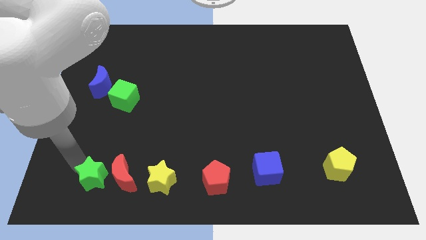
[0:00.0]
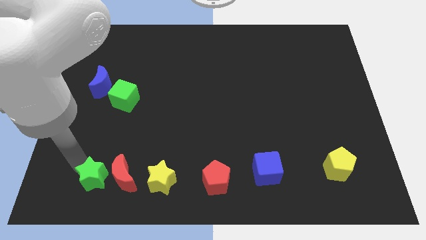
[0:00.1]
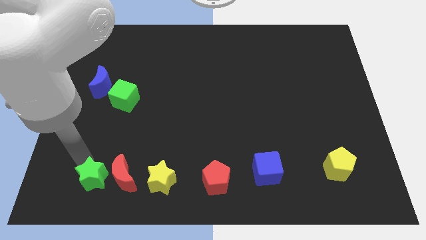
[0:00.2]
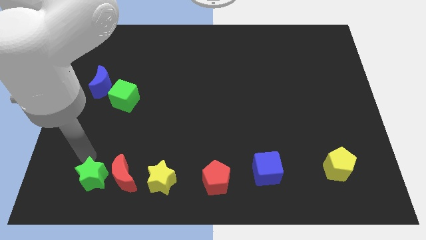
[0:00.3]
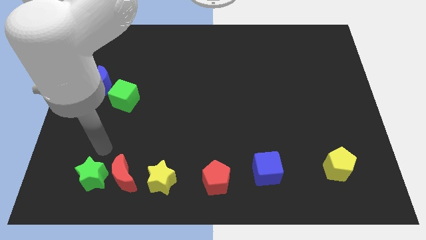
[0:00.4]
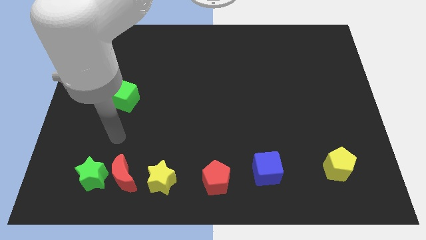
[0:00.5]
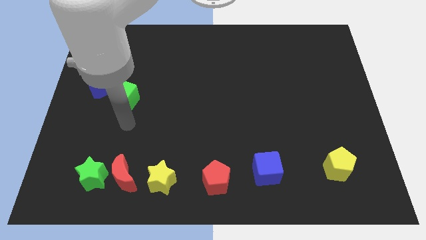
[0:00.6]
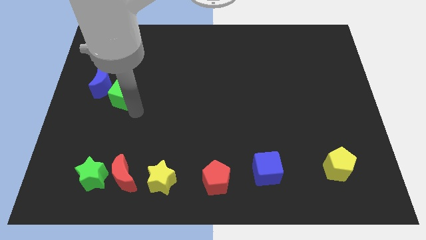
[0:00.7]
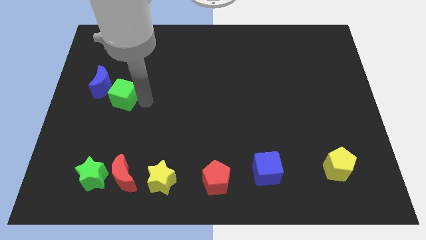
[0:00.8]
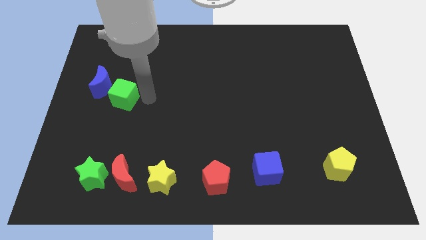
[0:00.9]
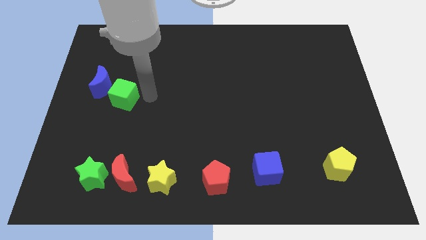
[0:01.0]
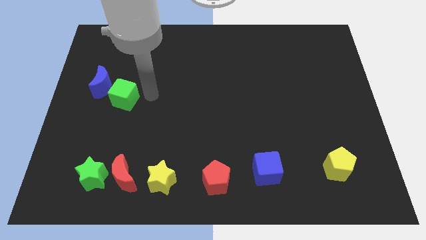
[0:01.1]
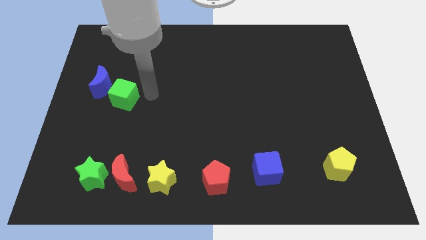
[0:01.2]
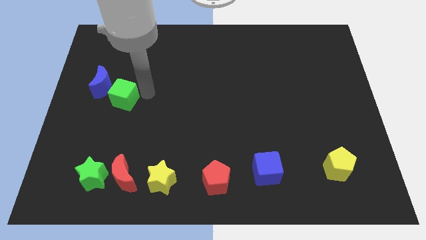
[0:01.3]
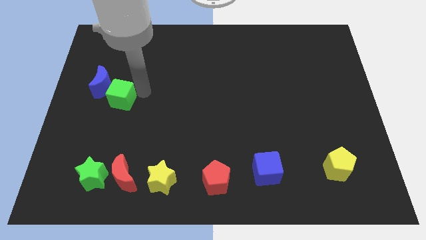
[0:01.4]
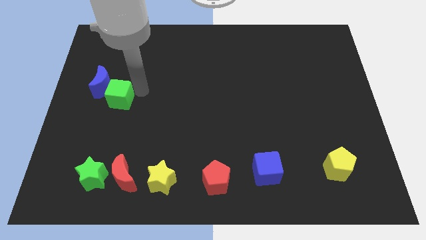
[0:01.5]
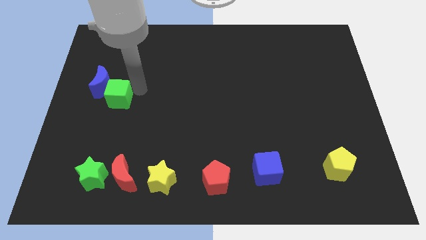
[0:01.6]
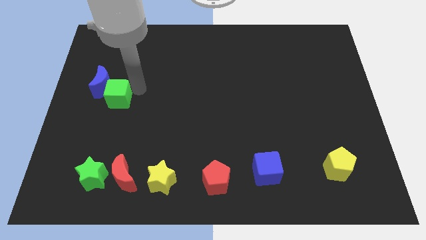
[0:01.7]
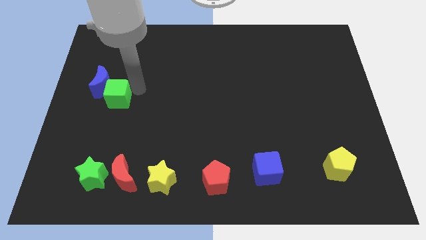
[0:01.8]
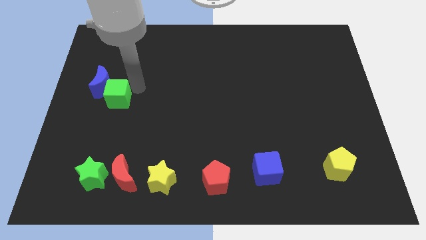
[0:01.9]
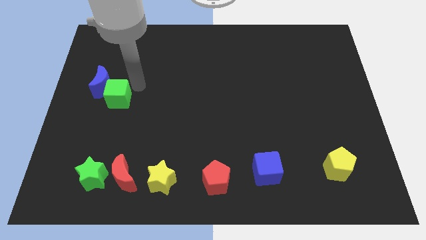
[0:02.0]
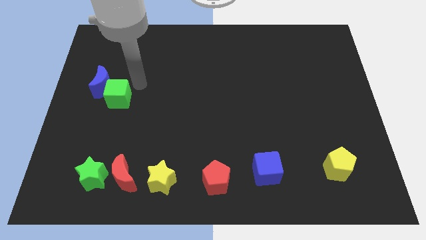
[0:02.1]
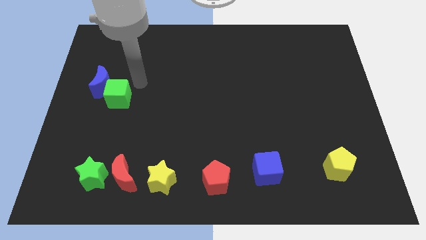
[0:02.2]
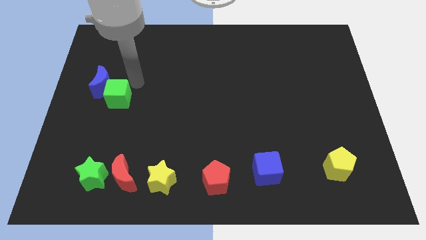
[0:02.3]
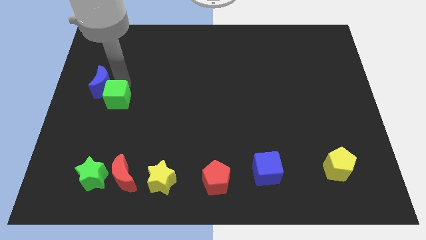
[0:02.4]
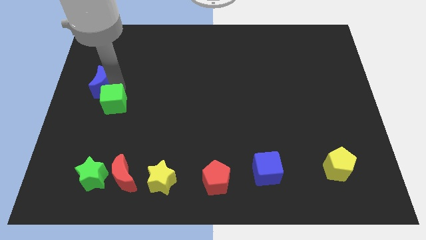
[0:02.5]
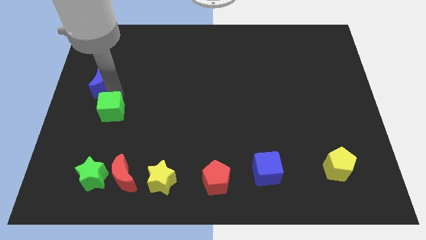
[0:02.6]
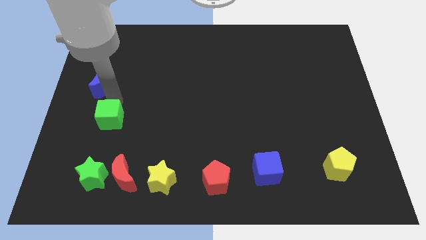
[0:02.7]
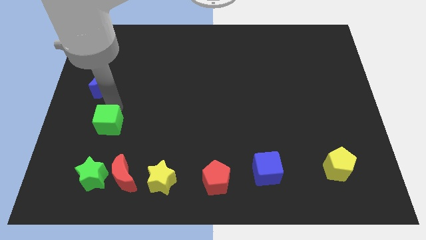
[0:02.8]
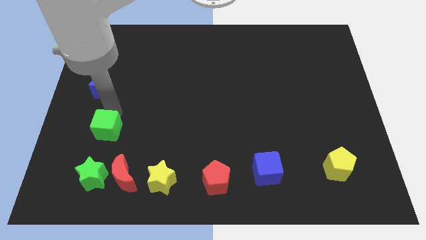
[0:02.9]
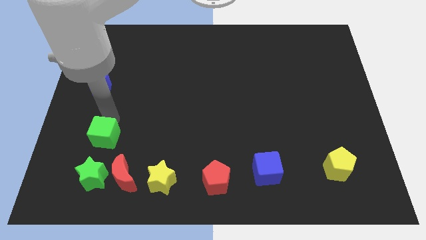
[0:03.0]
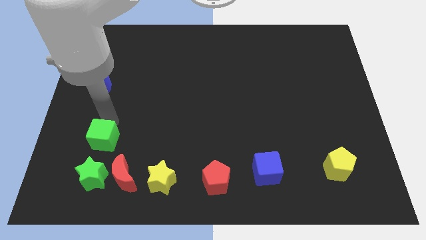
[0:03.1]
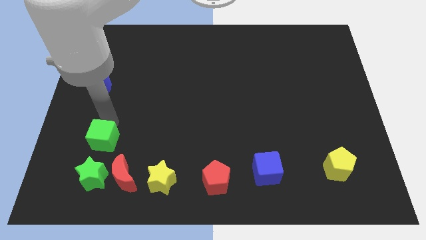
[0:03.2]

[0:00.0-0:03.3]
place the green cube at the top of the green star

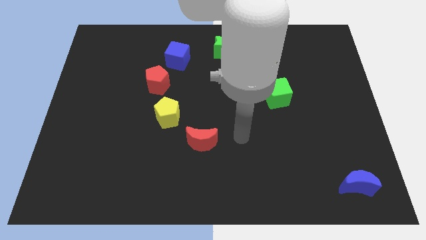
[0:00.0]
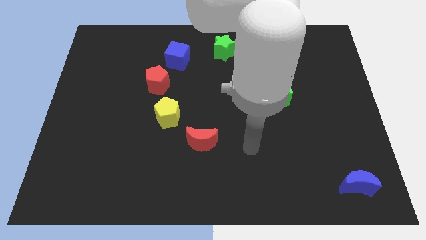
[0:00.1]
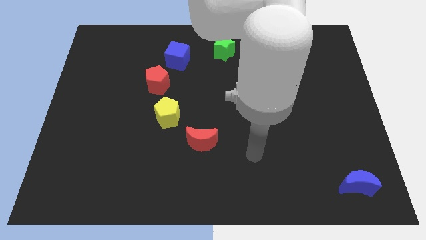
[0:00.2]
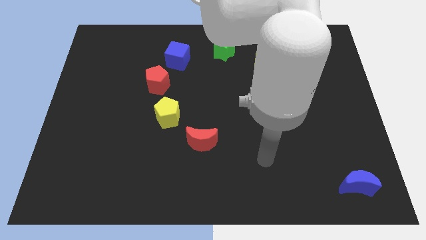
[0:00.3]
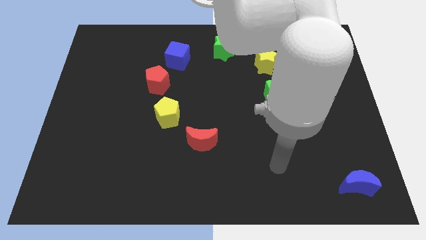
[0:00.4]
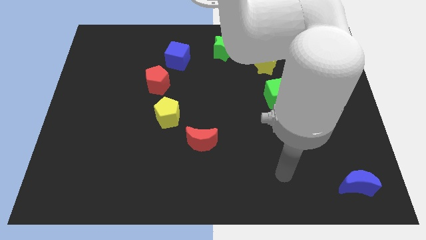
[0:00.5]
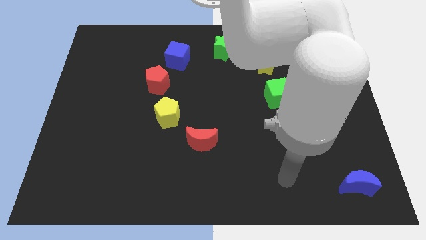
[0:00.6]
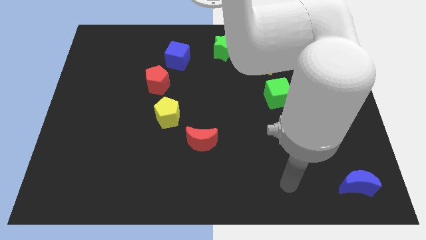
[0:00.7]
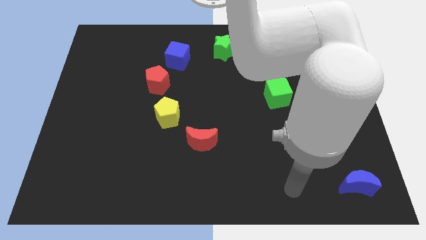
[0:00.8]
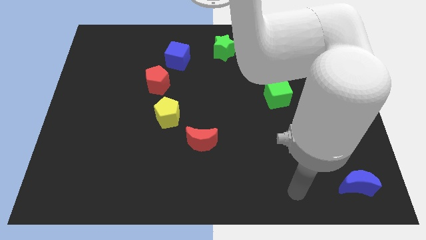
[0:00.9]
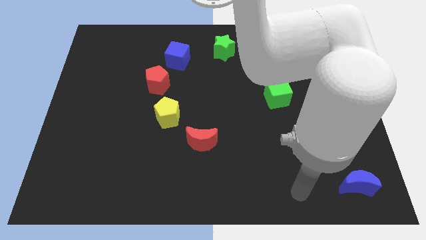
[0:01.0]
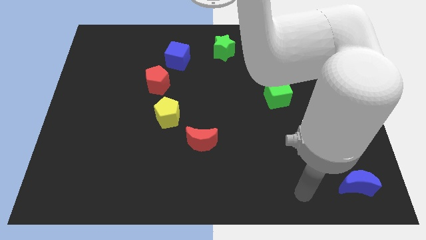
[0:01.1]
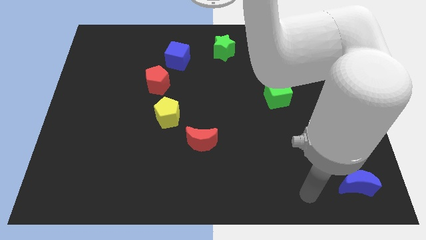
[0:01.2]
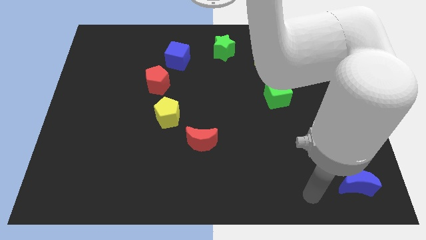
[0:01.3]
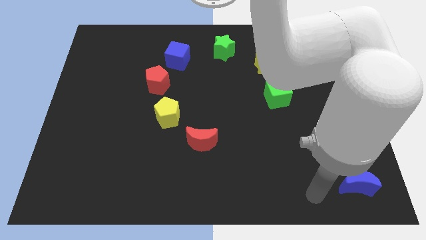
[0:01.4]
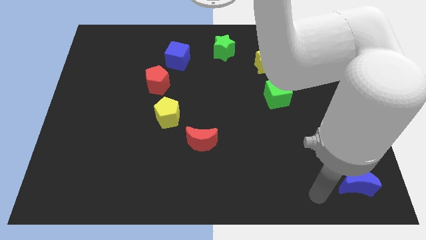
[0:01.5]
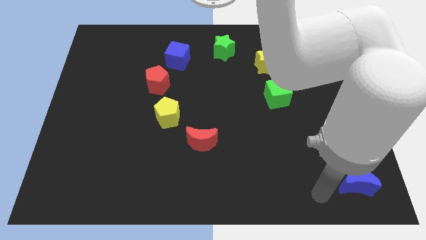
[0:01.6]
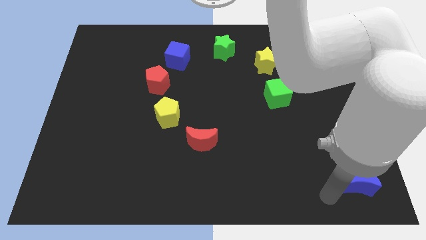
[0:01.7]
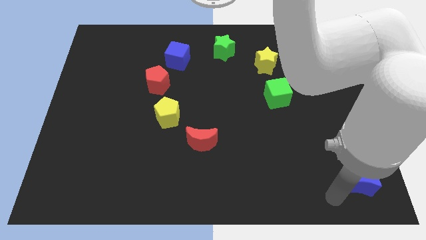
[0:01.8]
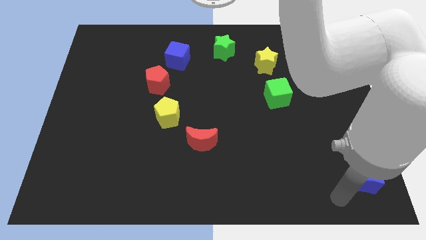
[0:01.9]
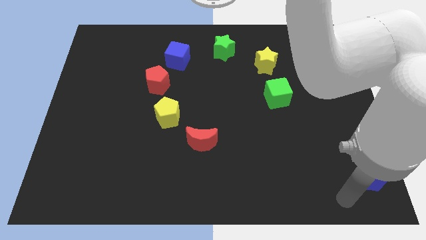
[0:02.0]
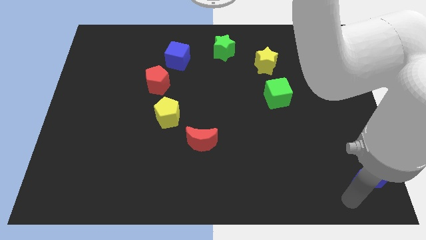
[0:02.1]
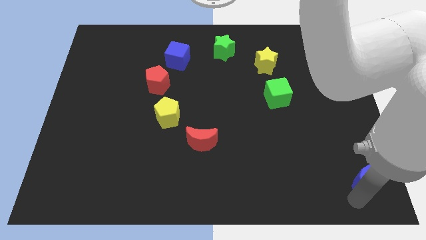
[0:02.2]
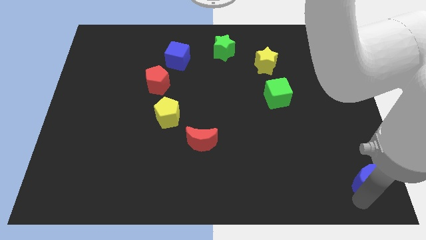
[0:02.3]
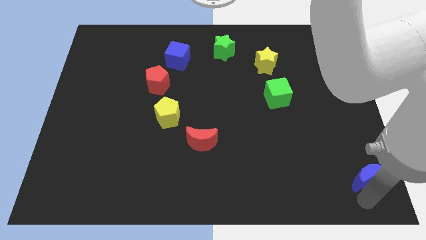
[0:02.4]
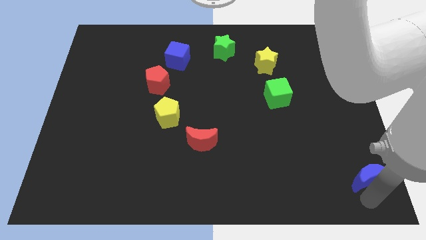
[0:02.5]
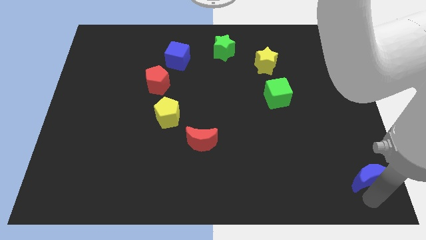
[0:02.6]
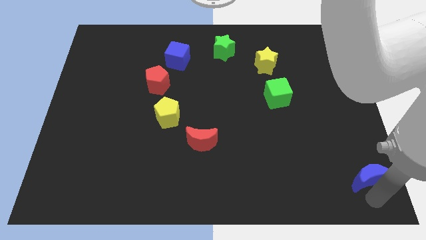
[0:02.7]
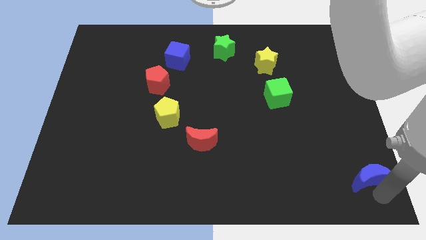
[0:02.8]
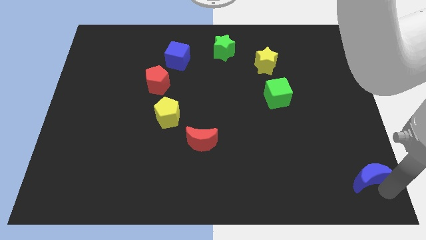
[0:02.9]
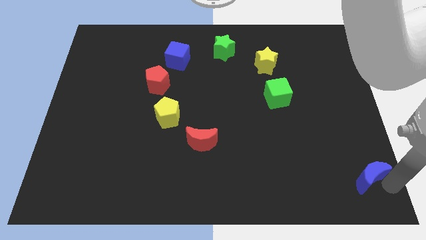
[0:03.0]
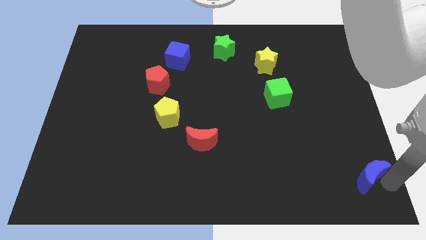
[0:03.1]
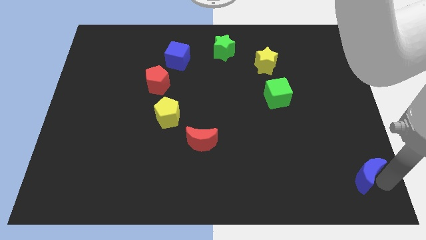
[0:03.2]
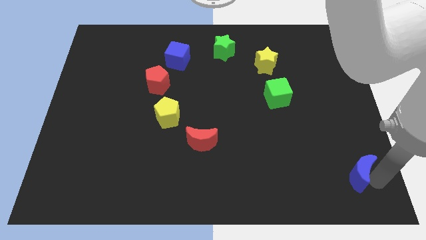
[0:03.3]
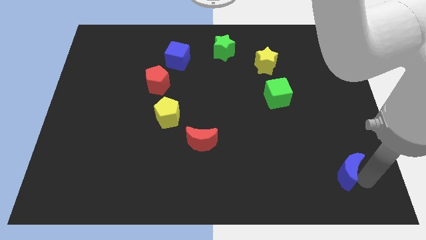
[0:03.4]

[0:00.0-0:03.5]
move the blue moon slightly to the left

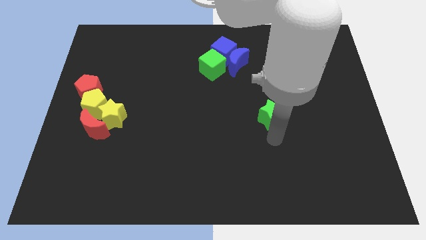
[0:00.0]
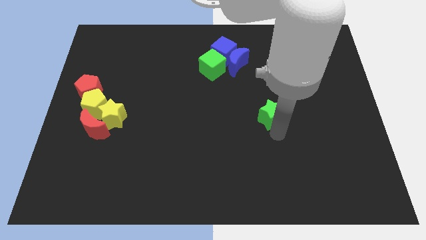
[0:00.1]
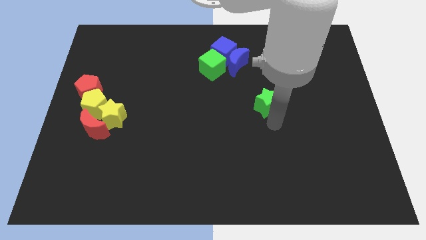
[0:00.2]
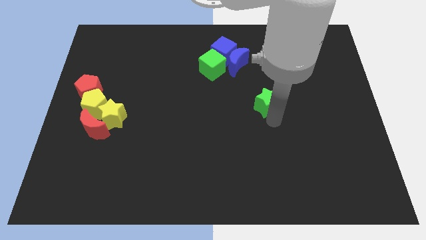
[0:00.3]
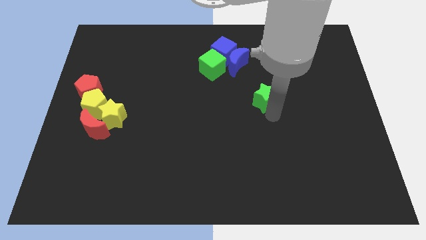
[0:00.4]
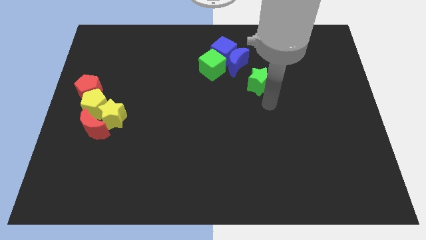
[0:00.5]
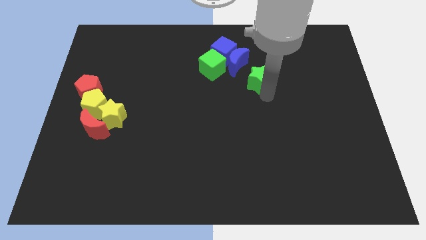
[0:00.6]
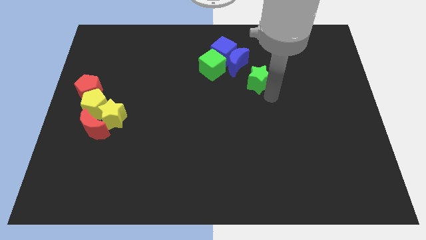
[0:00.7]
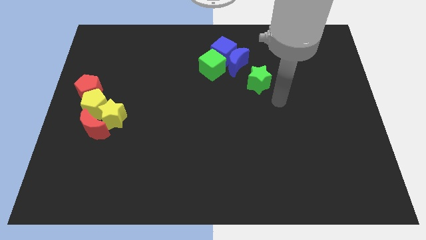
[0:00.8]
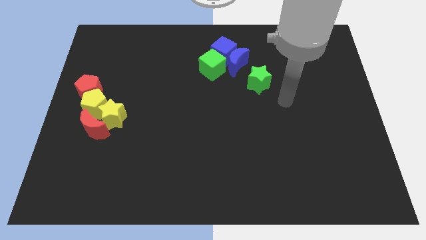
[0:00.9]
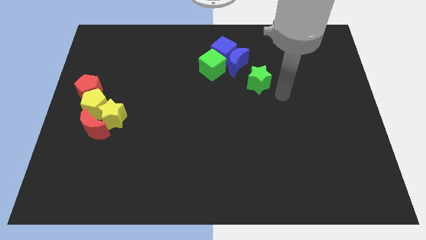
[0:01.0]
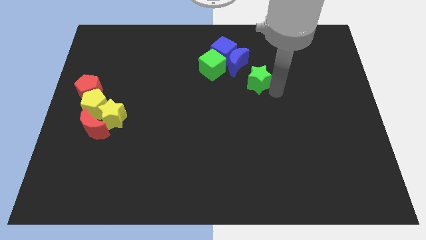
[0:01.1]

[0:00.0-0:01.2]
slide the green star towards up a bit

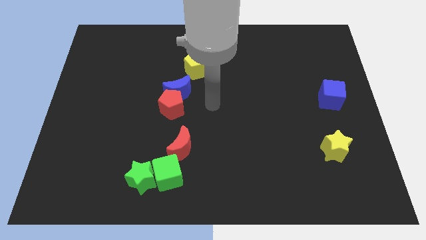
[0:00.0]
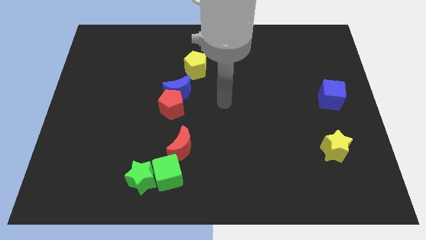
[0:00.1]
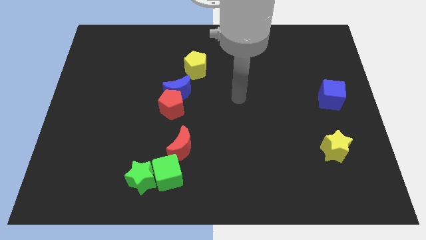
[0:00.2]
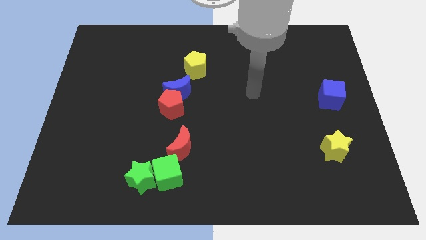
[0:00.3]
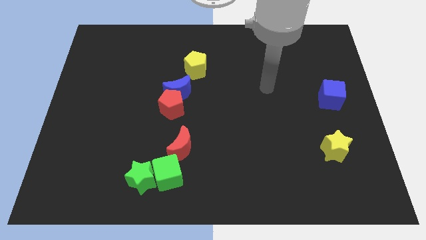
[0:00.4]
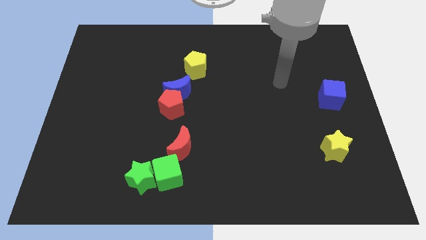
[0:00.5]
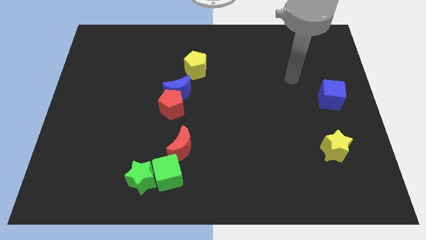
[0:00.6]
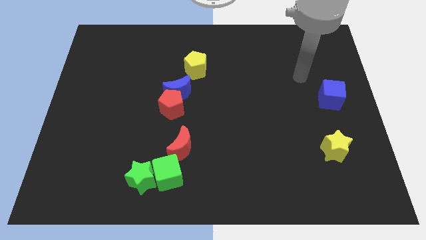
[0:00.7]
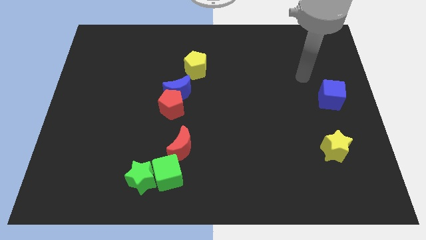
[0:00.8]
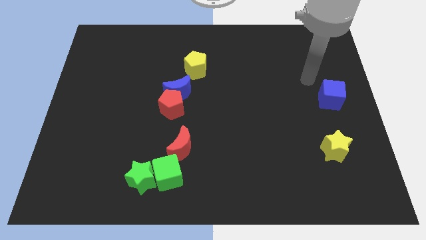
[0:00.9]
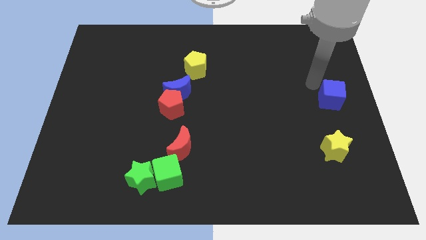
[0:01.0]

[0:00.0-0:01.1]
point your arm at the left of the blue cube
